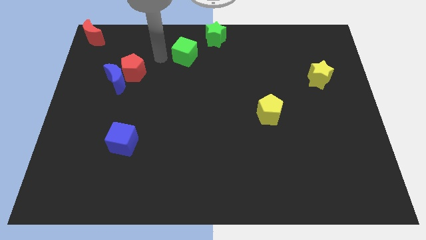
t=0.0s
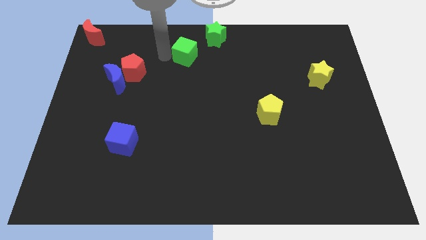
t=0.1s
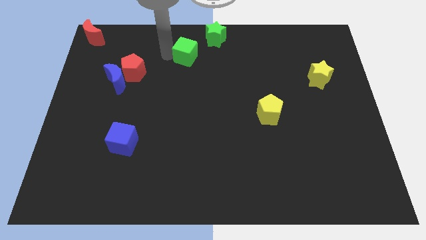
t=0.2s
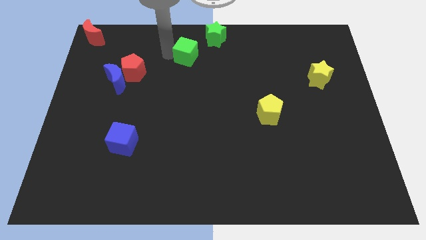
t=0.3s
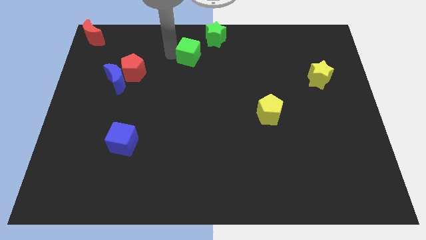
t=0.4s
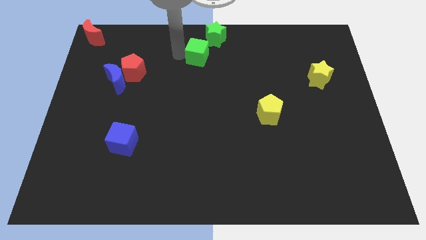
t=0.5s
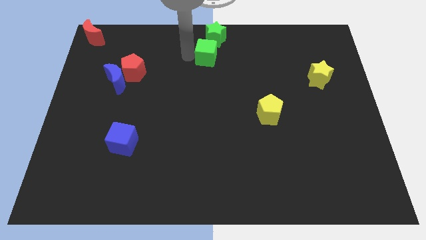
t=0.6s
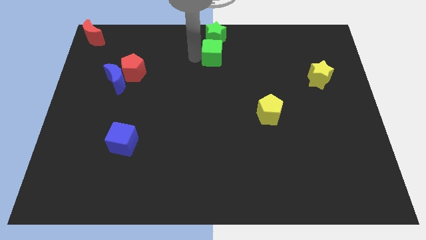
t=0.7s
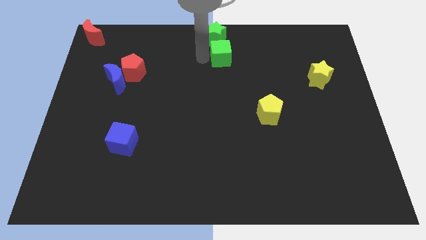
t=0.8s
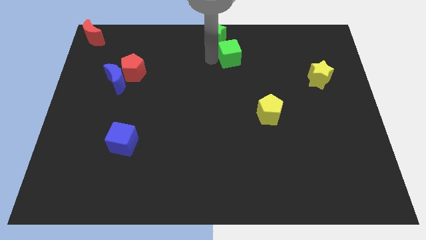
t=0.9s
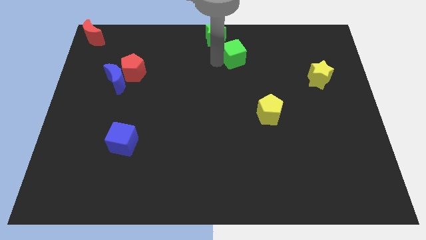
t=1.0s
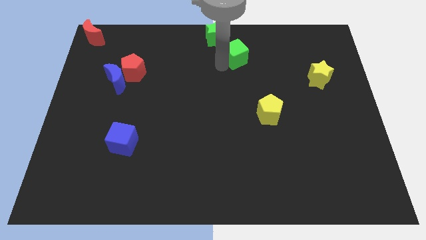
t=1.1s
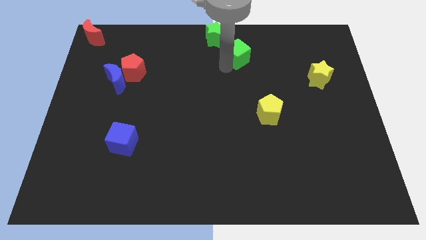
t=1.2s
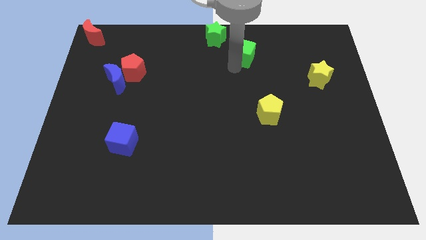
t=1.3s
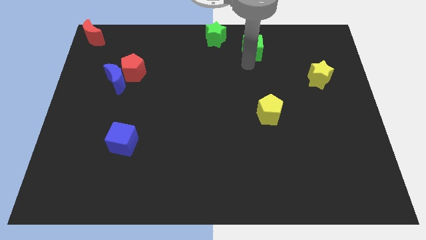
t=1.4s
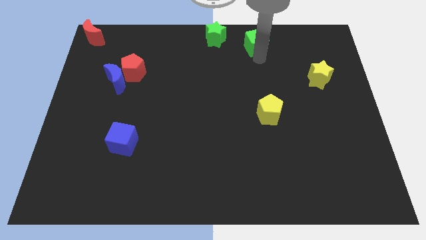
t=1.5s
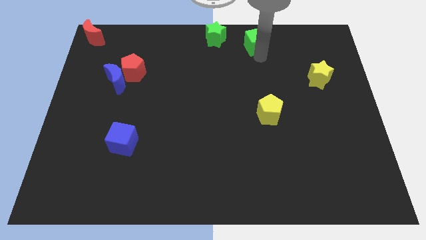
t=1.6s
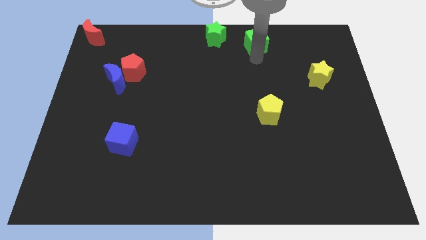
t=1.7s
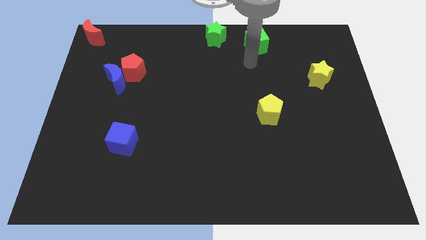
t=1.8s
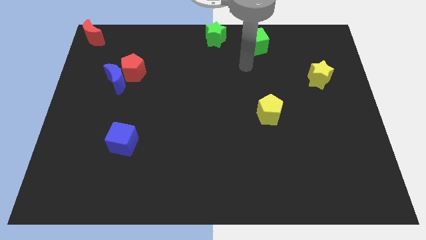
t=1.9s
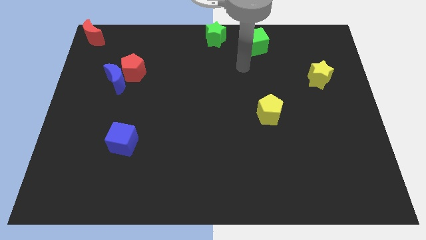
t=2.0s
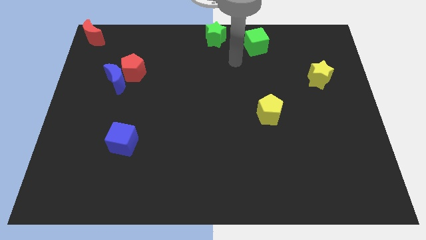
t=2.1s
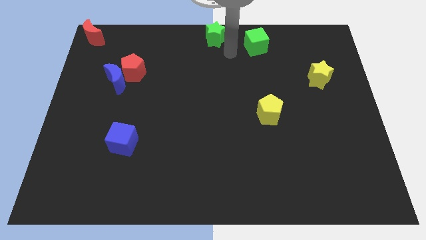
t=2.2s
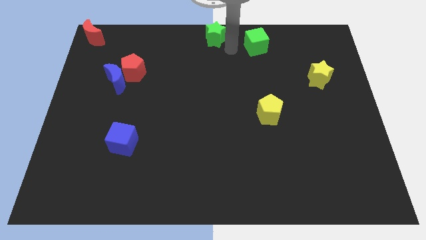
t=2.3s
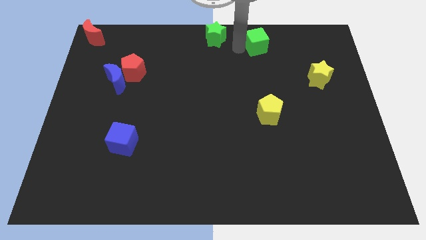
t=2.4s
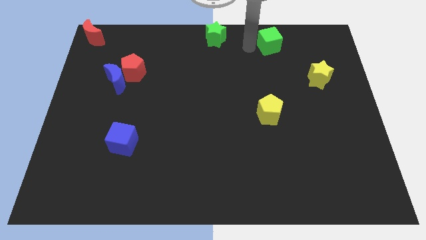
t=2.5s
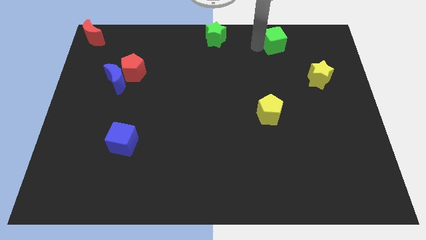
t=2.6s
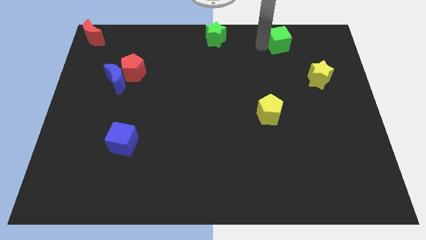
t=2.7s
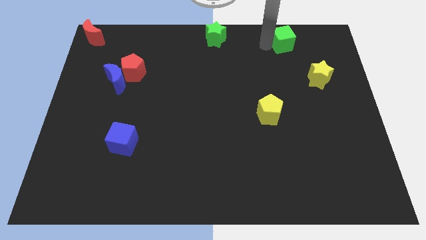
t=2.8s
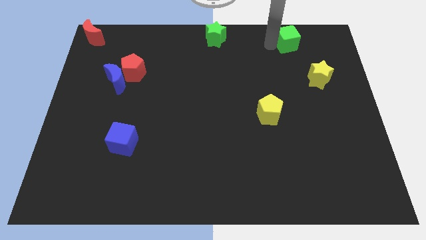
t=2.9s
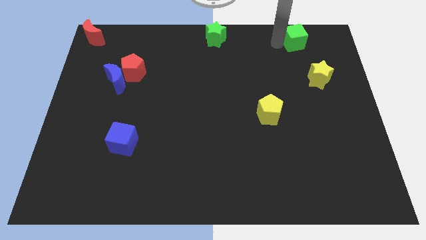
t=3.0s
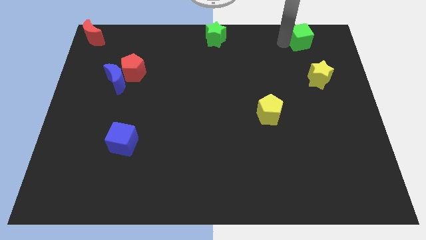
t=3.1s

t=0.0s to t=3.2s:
push the green cube to the top right of the board

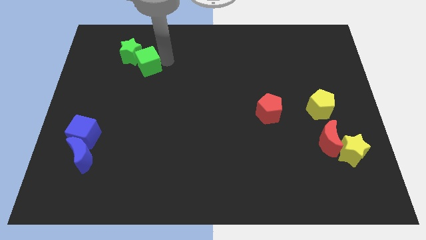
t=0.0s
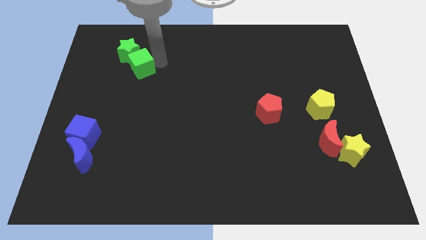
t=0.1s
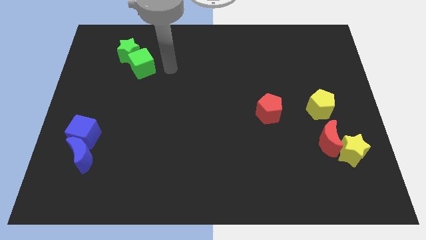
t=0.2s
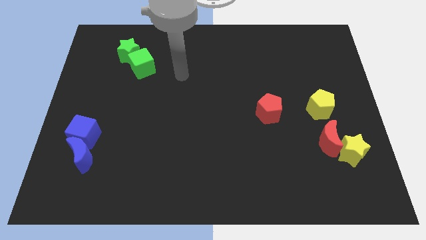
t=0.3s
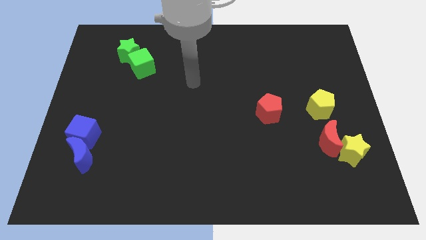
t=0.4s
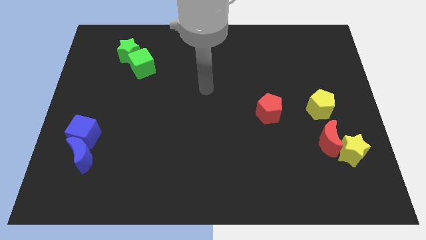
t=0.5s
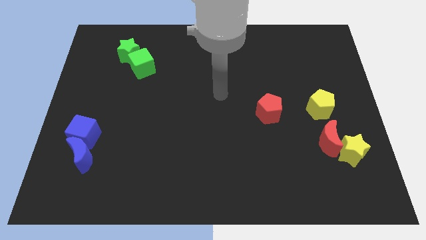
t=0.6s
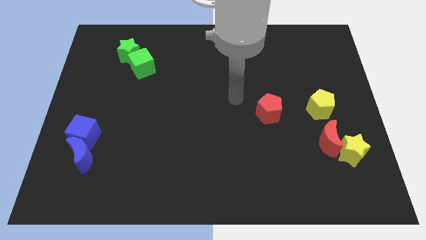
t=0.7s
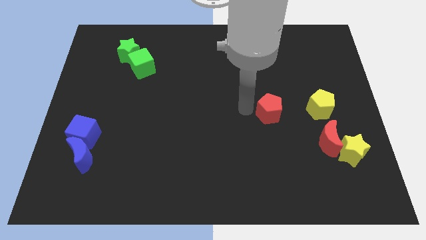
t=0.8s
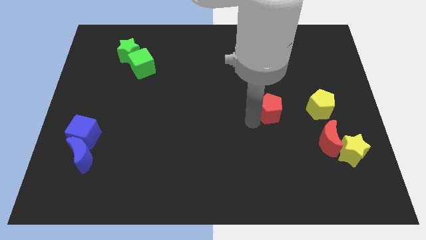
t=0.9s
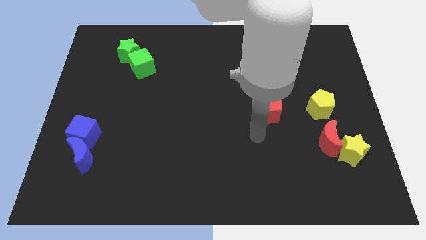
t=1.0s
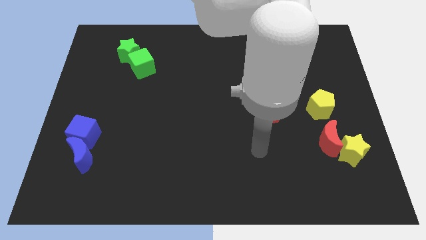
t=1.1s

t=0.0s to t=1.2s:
move arm to the bottom

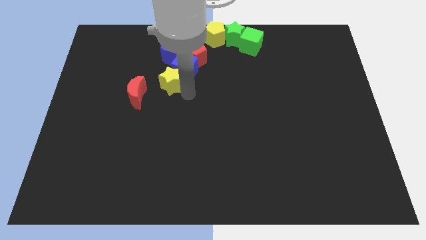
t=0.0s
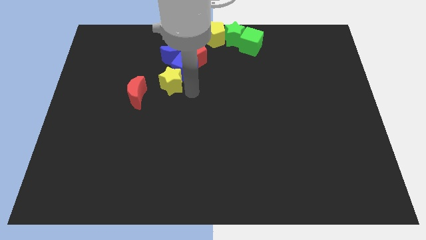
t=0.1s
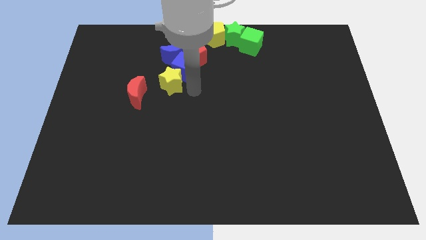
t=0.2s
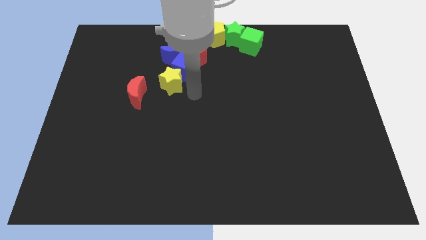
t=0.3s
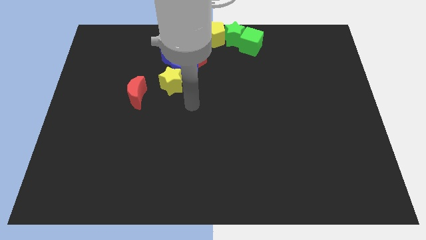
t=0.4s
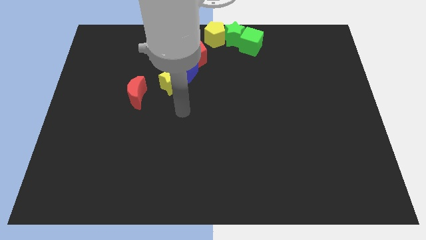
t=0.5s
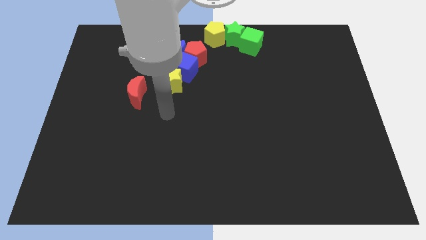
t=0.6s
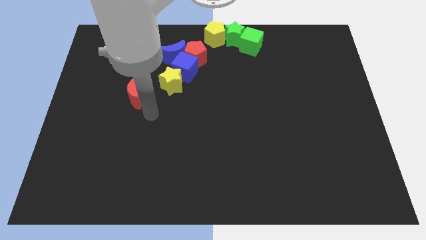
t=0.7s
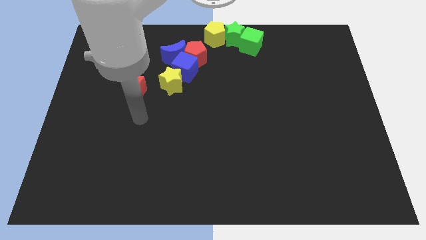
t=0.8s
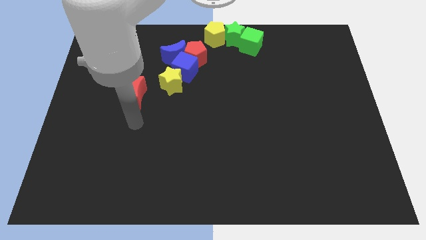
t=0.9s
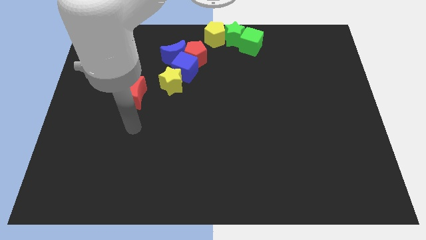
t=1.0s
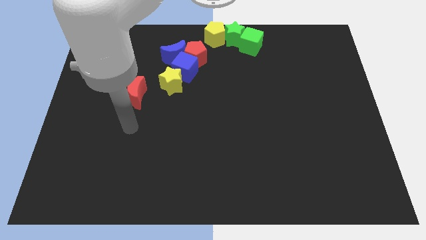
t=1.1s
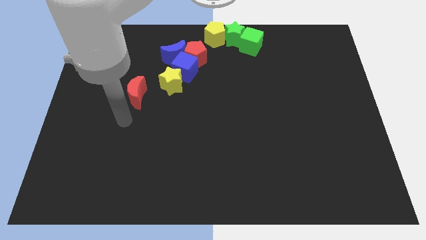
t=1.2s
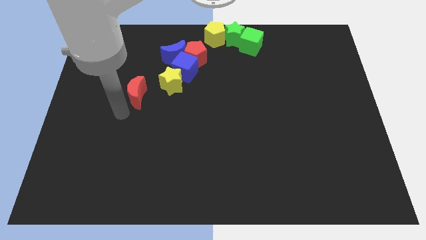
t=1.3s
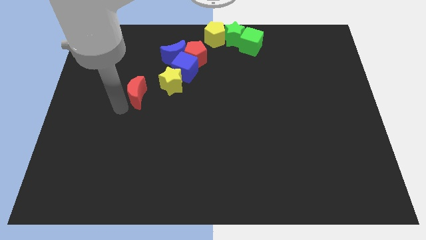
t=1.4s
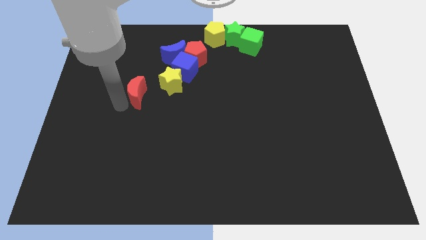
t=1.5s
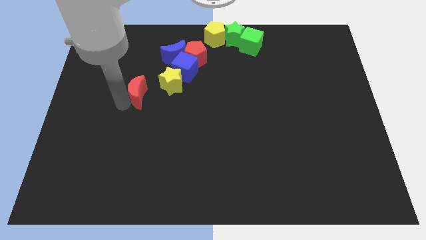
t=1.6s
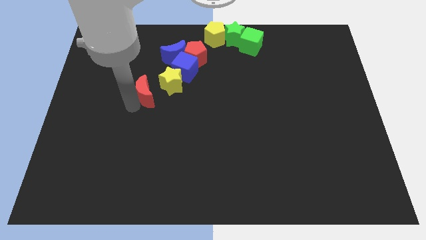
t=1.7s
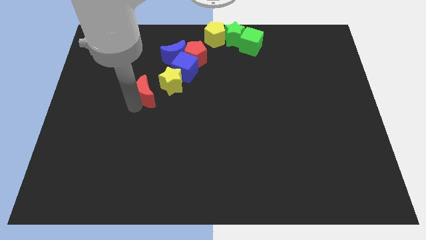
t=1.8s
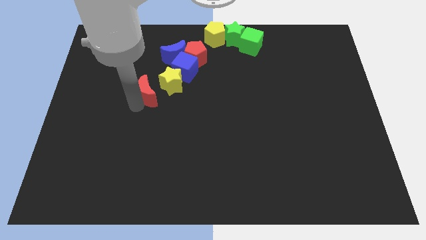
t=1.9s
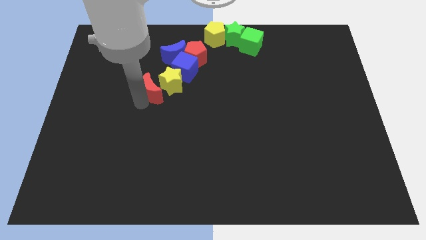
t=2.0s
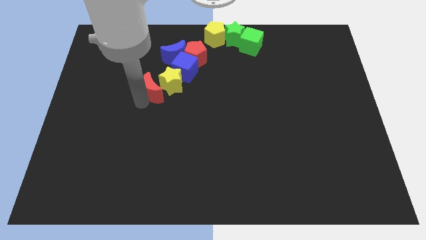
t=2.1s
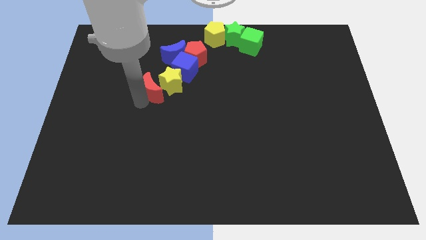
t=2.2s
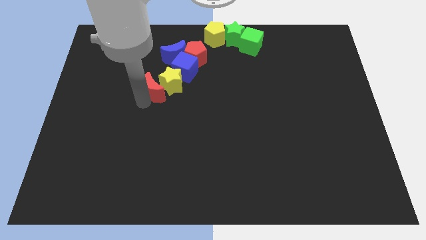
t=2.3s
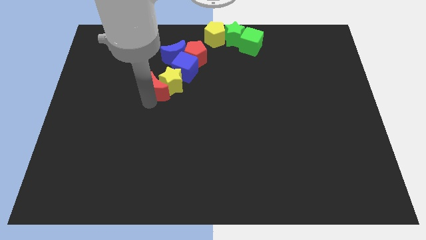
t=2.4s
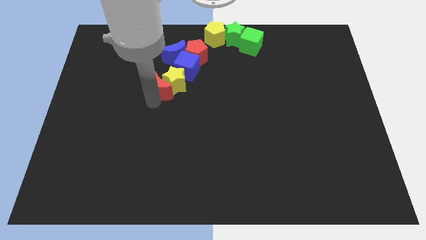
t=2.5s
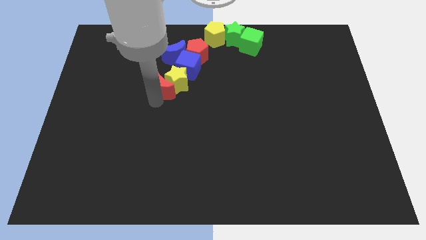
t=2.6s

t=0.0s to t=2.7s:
push the red moon towards the group of blocks

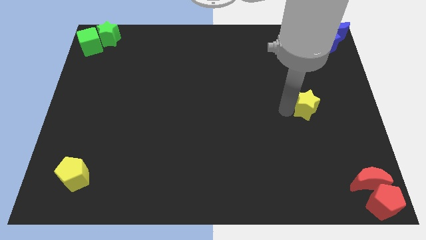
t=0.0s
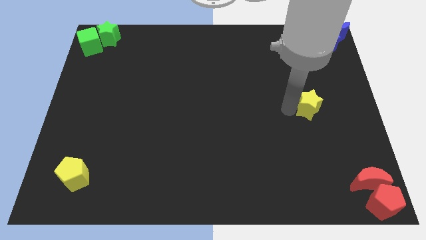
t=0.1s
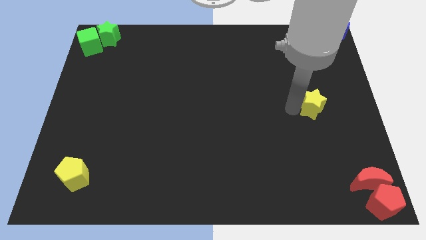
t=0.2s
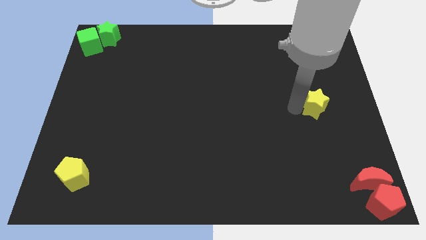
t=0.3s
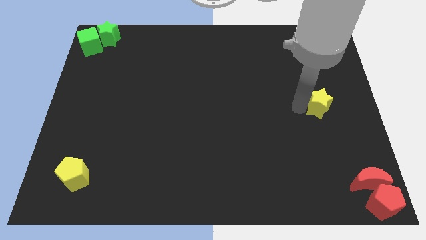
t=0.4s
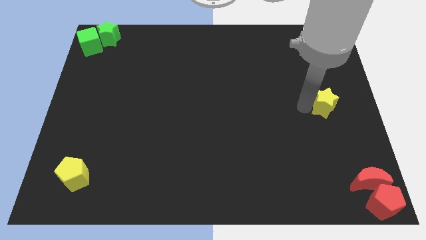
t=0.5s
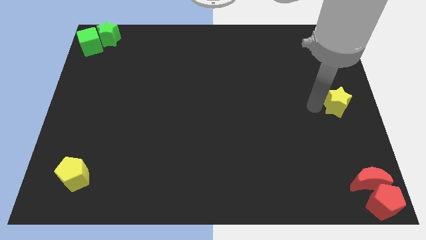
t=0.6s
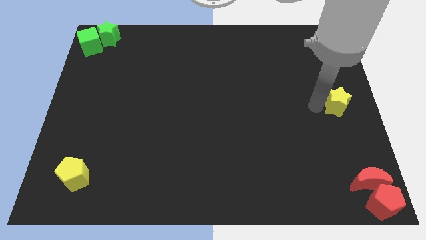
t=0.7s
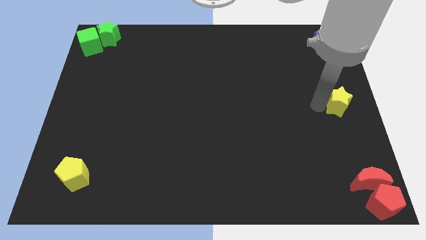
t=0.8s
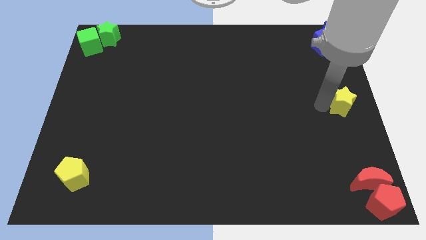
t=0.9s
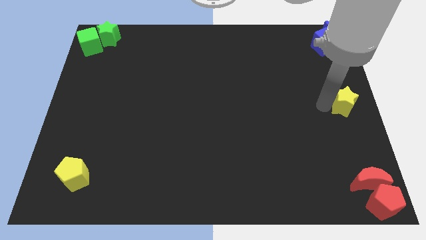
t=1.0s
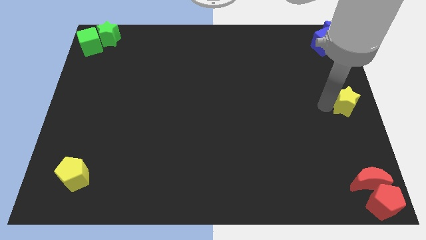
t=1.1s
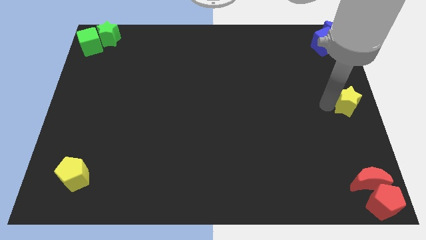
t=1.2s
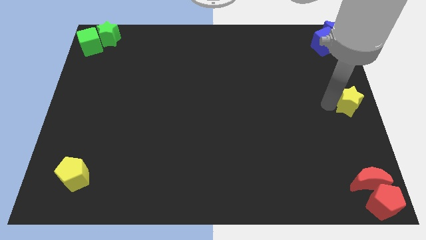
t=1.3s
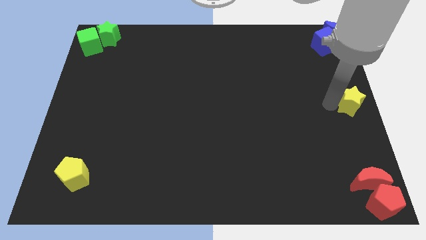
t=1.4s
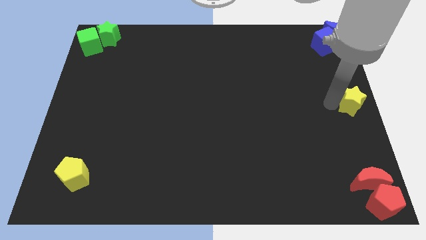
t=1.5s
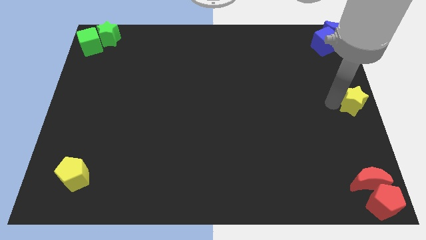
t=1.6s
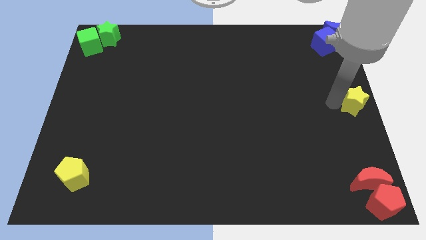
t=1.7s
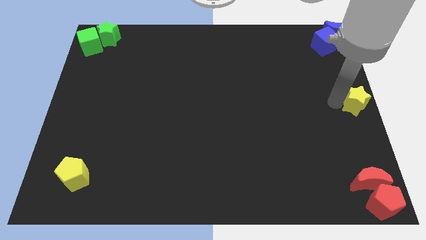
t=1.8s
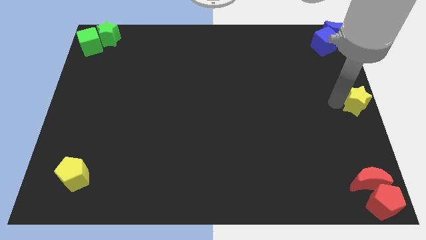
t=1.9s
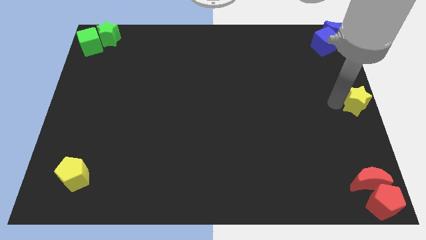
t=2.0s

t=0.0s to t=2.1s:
move the yellow star to the right center of the board

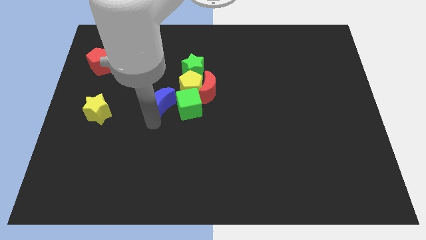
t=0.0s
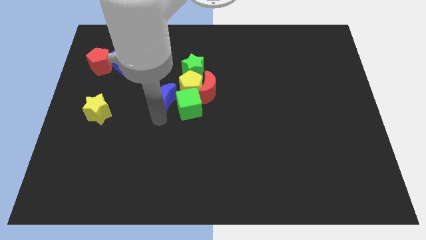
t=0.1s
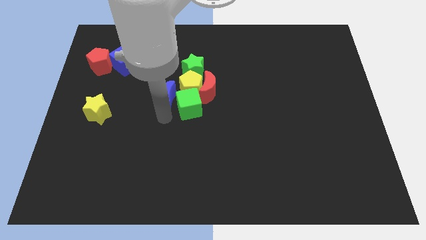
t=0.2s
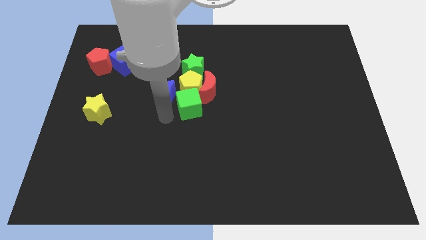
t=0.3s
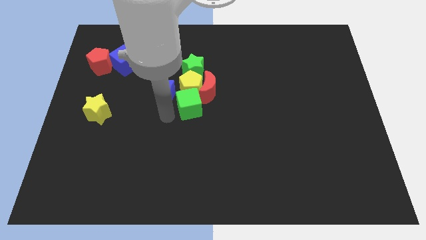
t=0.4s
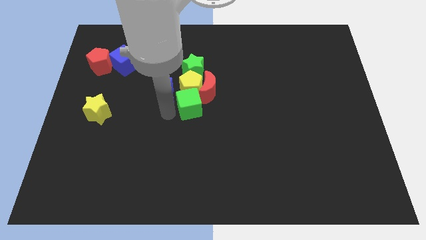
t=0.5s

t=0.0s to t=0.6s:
place the blue crescent to the left of the yellow pentagon
